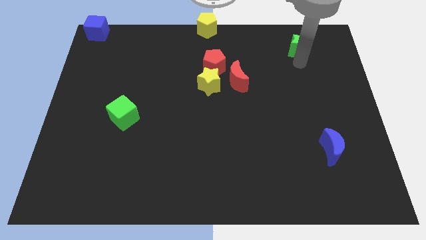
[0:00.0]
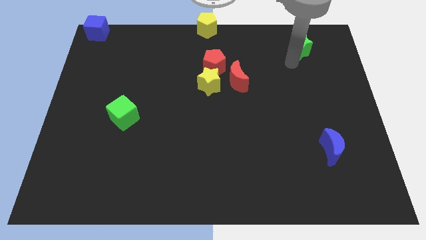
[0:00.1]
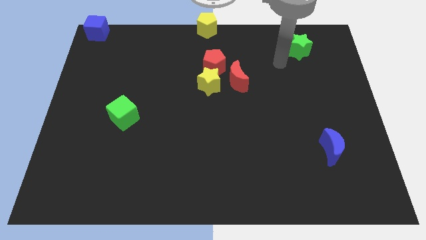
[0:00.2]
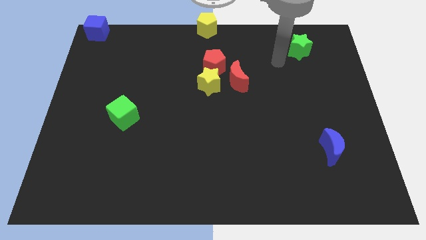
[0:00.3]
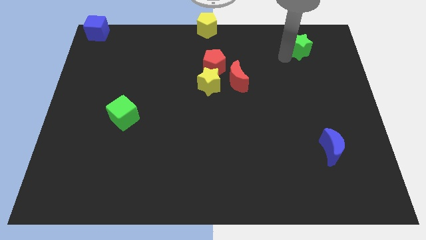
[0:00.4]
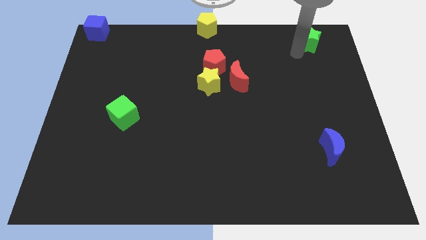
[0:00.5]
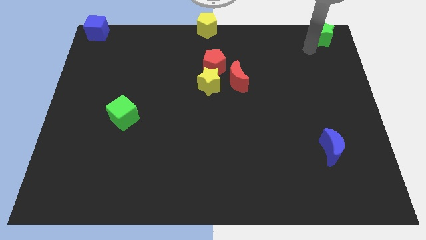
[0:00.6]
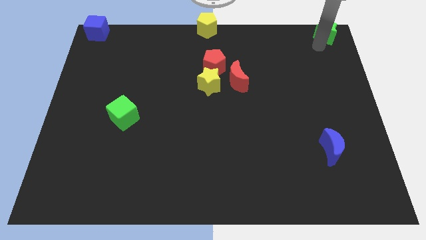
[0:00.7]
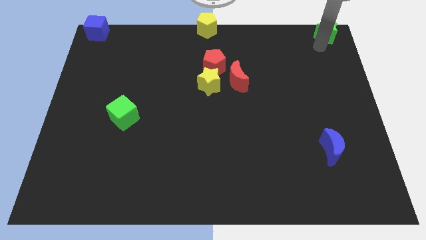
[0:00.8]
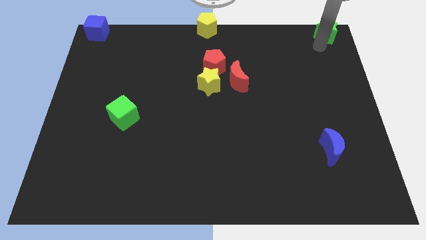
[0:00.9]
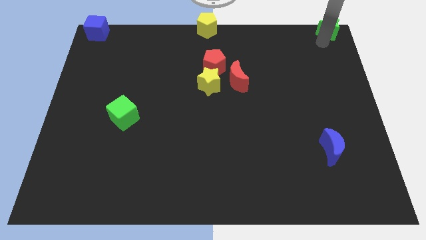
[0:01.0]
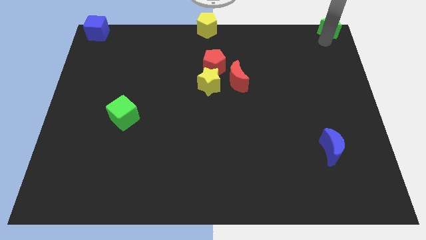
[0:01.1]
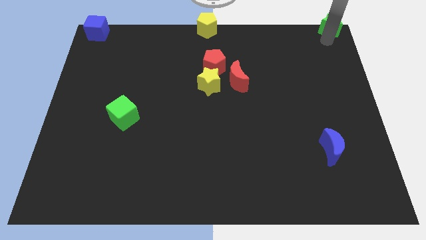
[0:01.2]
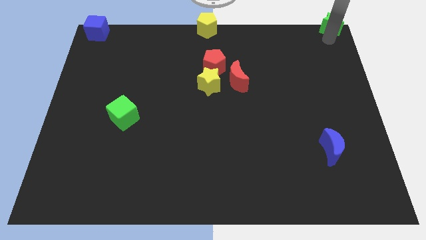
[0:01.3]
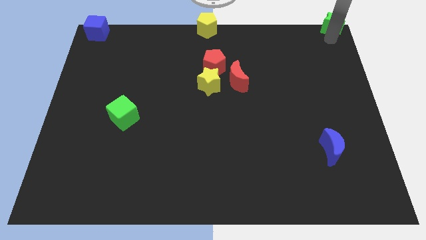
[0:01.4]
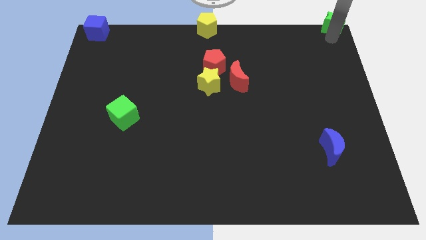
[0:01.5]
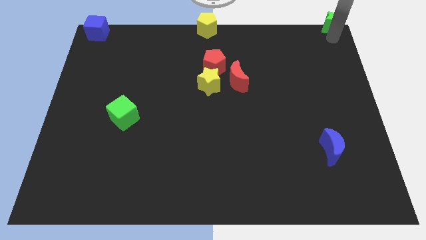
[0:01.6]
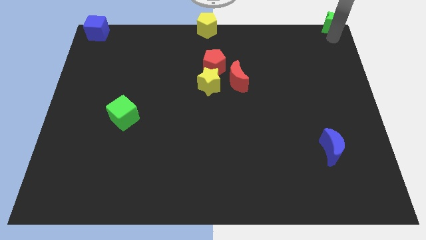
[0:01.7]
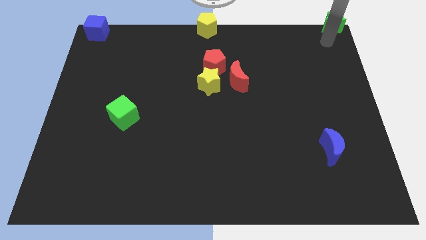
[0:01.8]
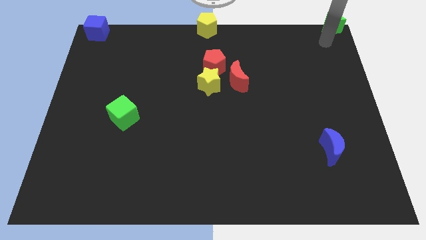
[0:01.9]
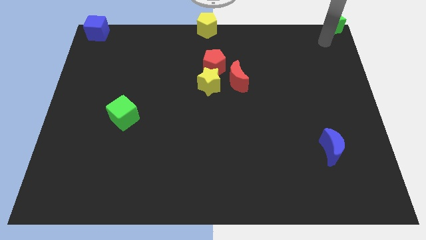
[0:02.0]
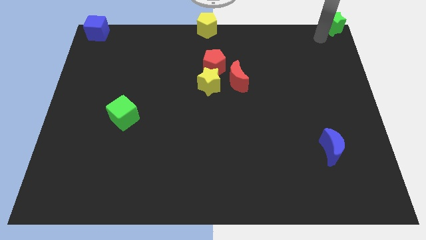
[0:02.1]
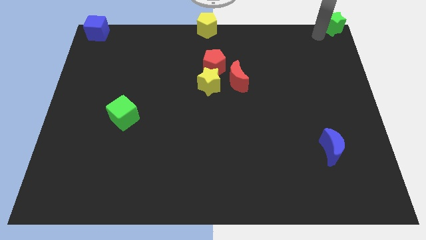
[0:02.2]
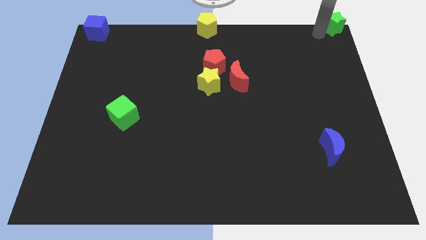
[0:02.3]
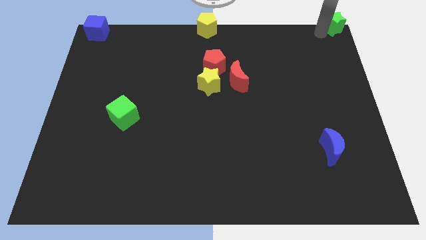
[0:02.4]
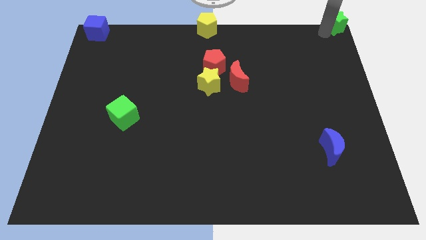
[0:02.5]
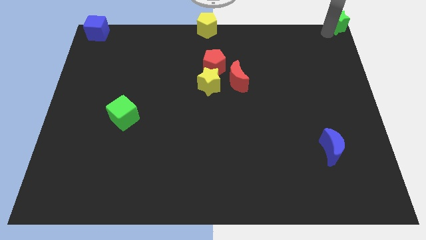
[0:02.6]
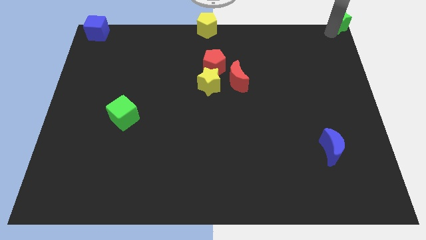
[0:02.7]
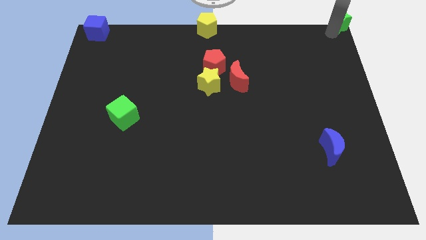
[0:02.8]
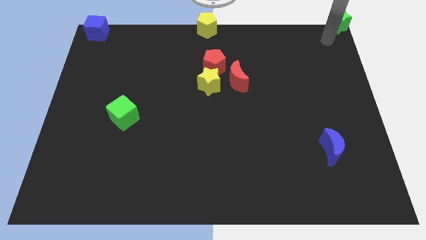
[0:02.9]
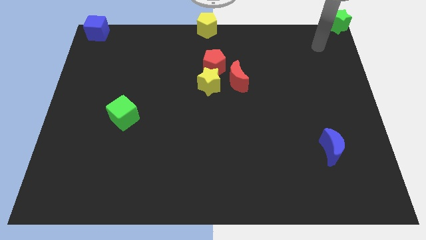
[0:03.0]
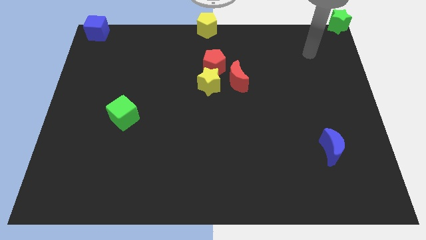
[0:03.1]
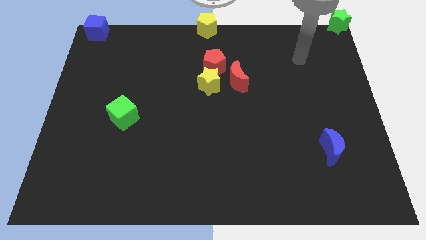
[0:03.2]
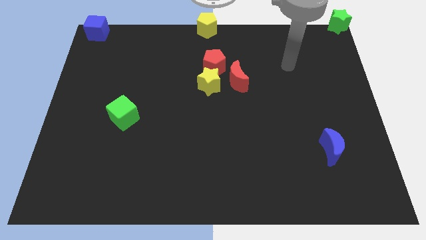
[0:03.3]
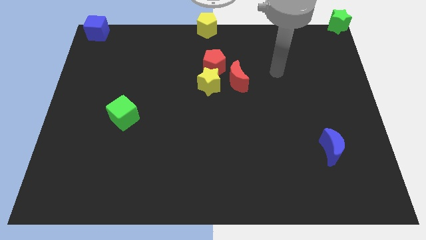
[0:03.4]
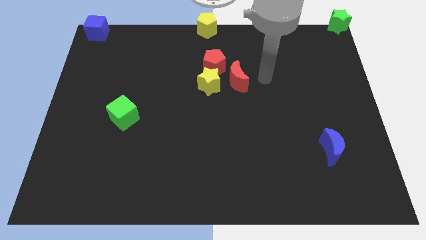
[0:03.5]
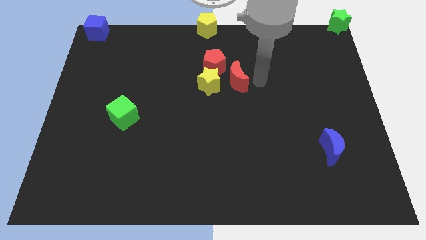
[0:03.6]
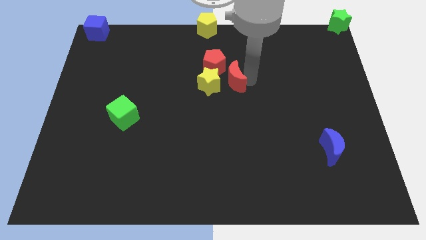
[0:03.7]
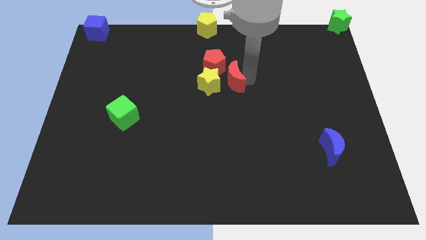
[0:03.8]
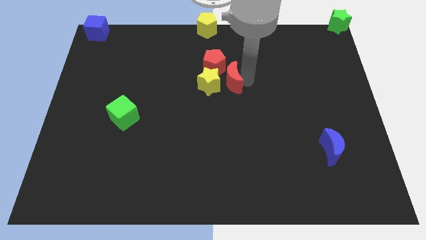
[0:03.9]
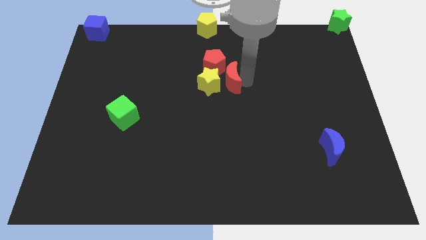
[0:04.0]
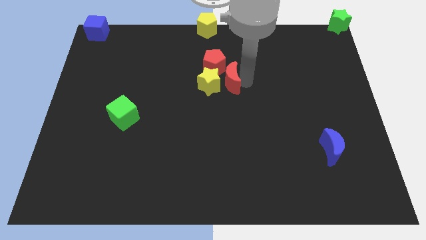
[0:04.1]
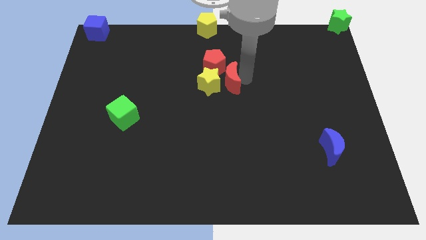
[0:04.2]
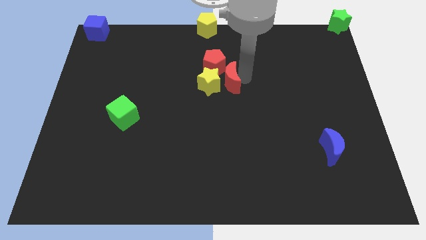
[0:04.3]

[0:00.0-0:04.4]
push the green star on the top right corner of the board

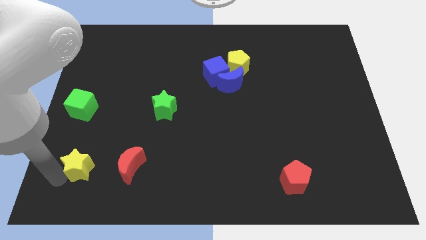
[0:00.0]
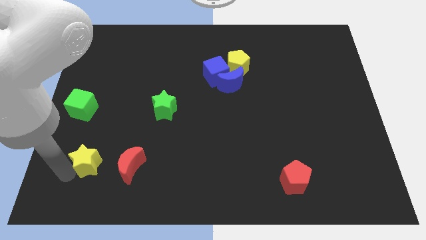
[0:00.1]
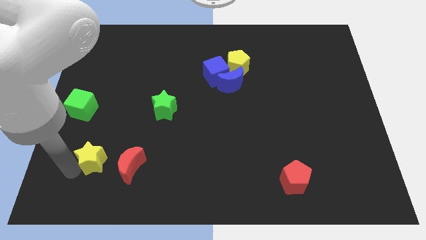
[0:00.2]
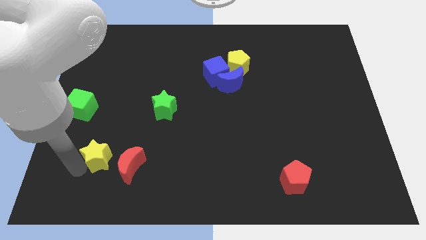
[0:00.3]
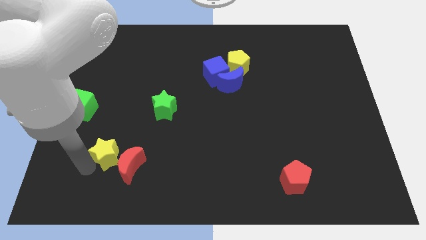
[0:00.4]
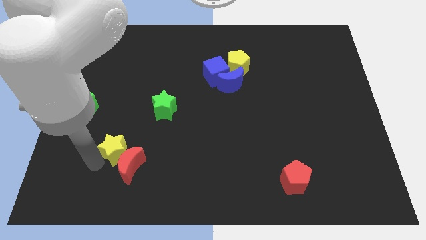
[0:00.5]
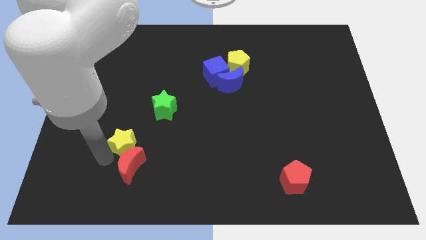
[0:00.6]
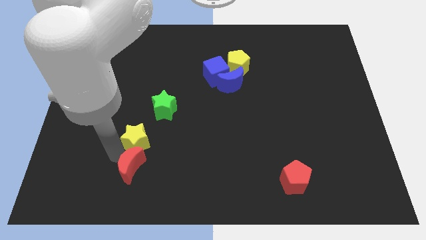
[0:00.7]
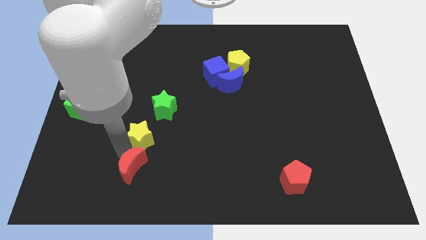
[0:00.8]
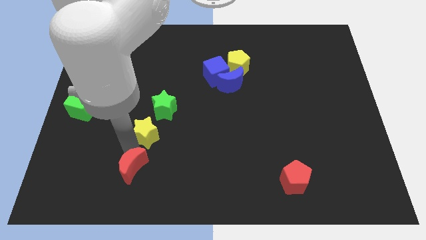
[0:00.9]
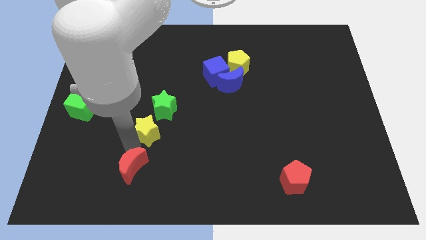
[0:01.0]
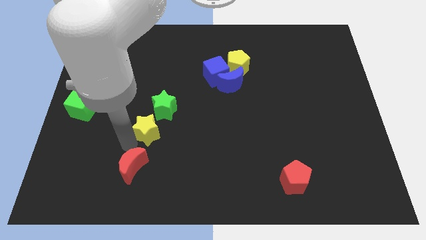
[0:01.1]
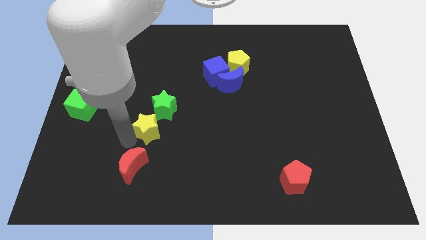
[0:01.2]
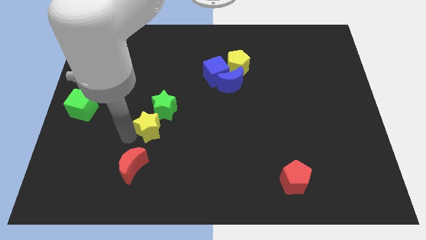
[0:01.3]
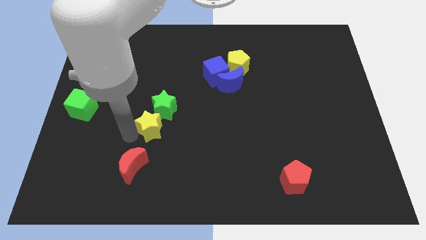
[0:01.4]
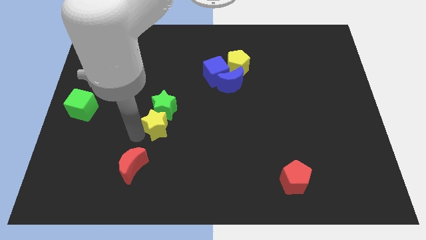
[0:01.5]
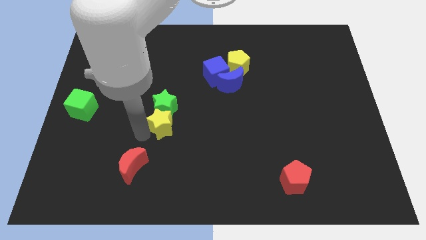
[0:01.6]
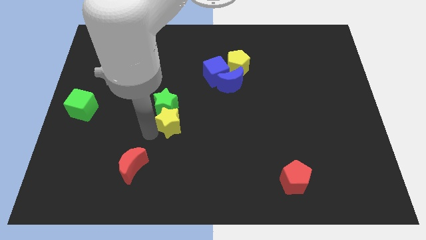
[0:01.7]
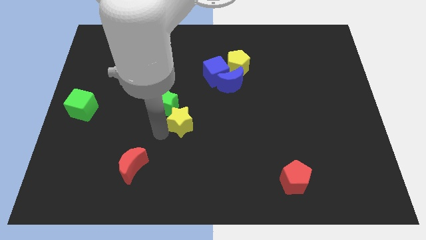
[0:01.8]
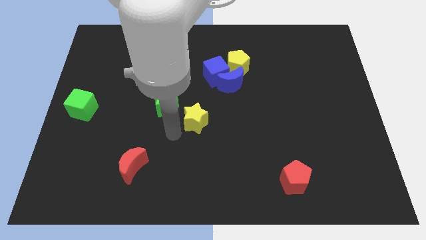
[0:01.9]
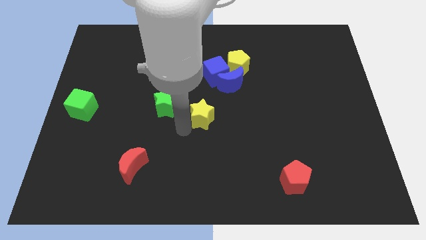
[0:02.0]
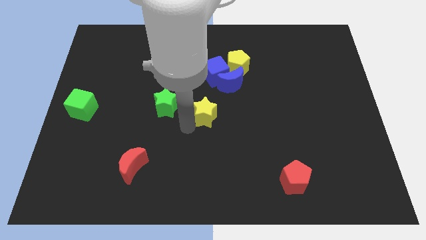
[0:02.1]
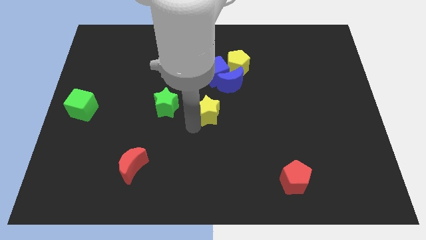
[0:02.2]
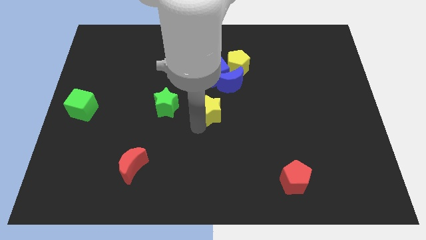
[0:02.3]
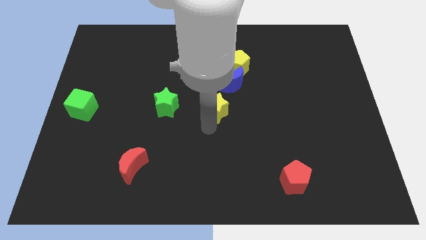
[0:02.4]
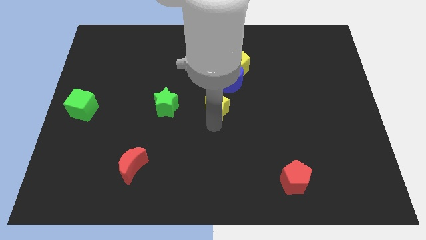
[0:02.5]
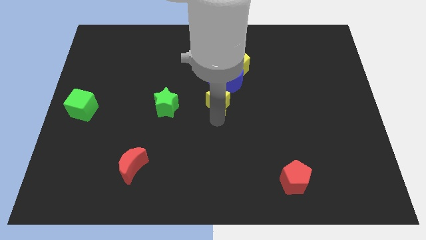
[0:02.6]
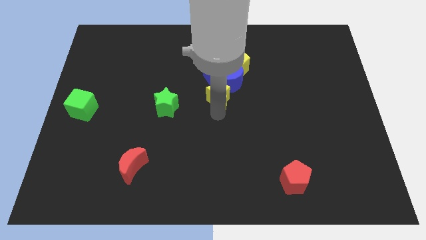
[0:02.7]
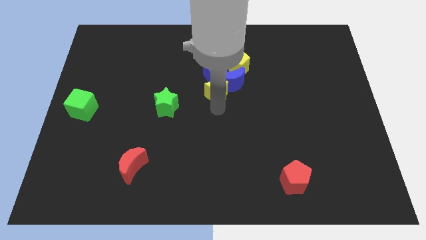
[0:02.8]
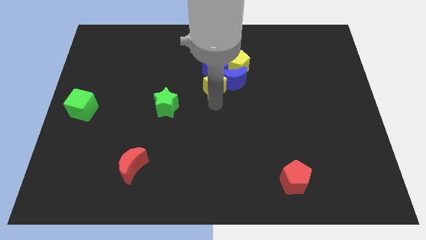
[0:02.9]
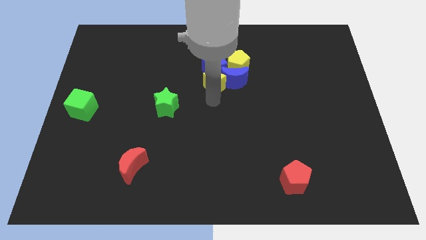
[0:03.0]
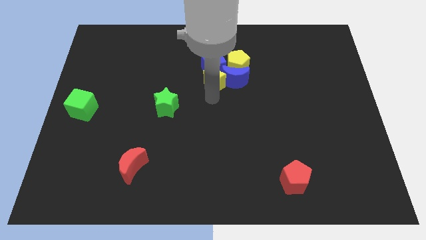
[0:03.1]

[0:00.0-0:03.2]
move the yellow star to the group of blocks

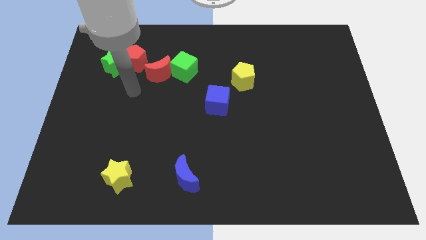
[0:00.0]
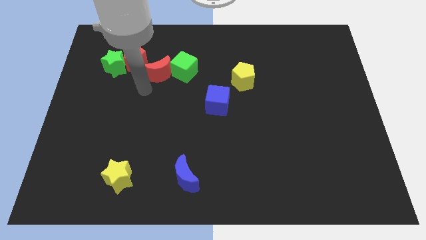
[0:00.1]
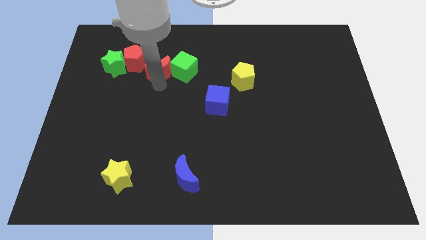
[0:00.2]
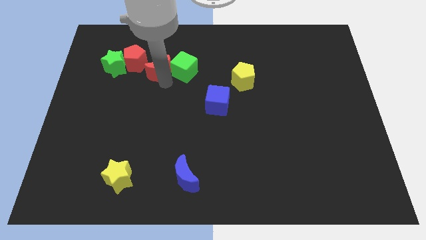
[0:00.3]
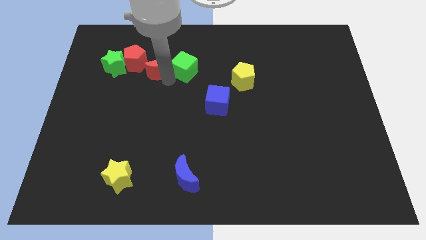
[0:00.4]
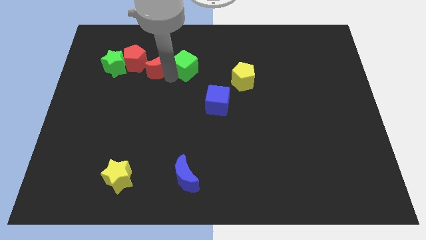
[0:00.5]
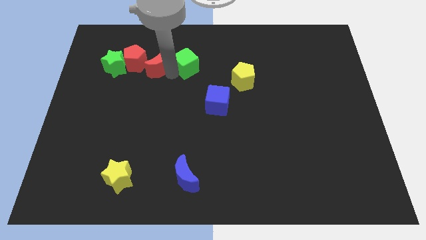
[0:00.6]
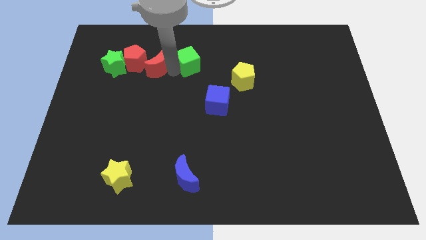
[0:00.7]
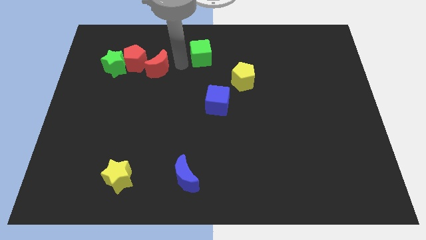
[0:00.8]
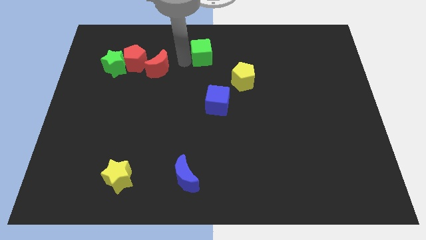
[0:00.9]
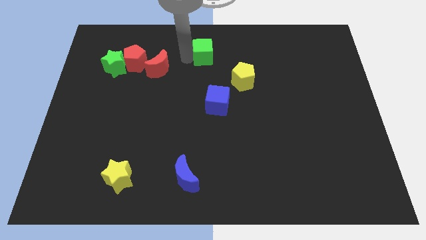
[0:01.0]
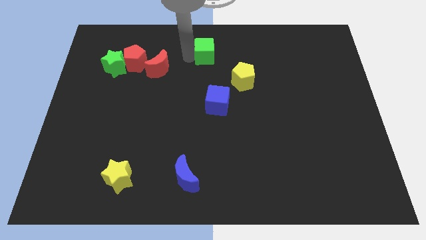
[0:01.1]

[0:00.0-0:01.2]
apart green cube from red crescent

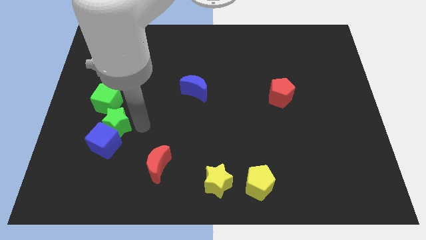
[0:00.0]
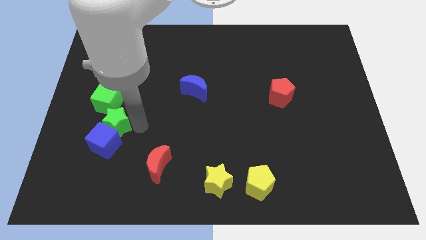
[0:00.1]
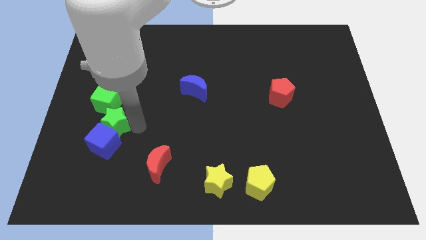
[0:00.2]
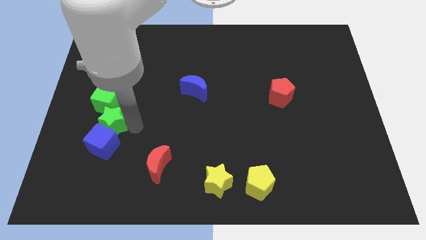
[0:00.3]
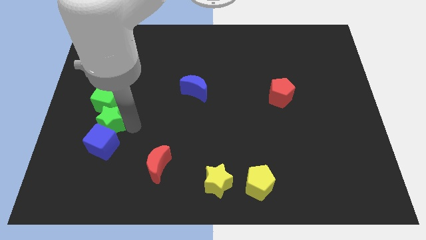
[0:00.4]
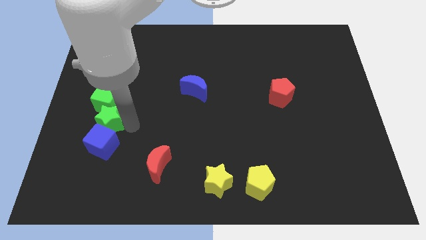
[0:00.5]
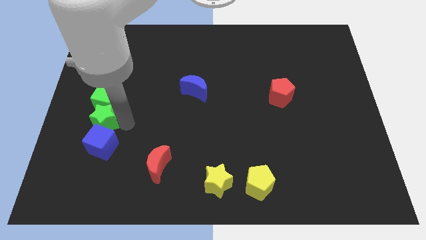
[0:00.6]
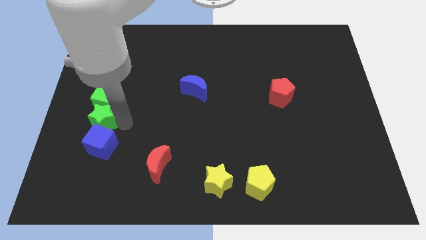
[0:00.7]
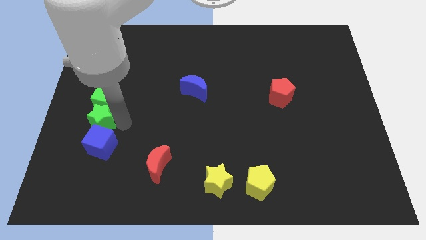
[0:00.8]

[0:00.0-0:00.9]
push the green star to the bottom of the green cube
